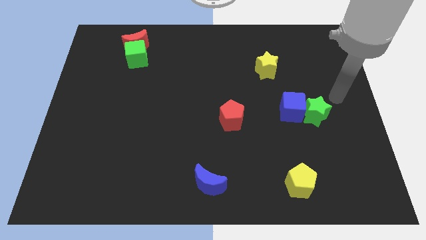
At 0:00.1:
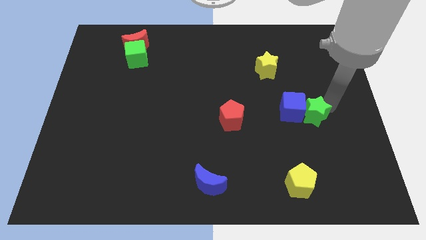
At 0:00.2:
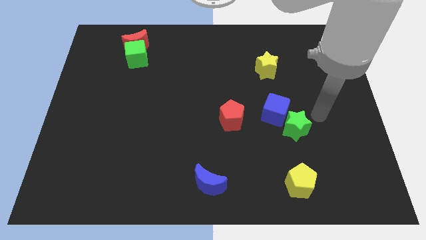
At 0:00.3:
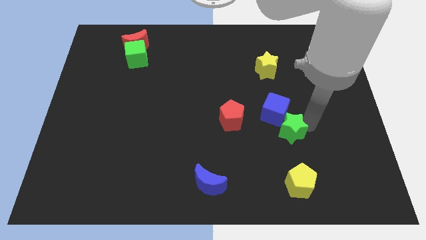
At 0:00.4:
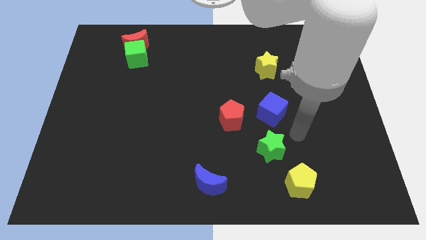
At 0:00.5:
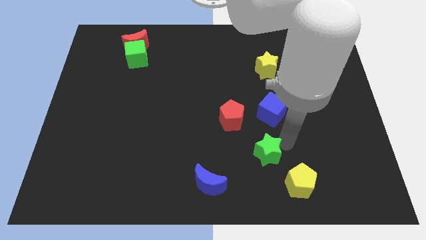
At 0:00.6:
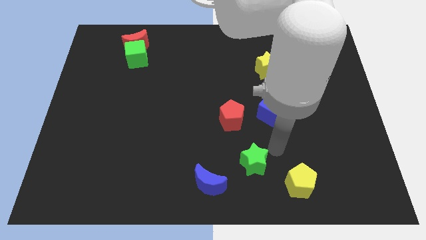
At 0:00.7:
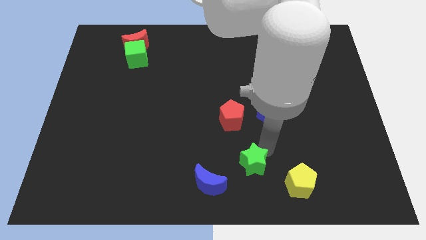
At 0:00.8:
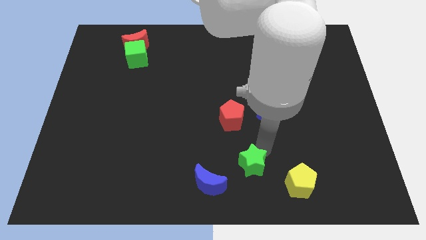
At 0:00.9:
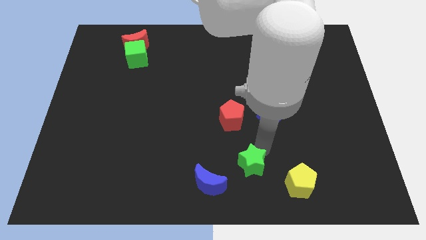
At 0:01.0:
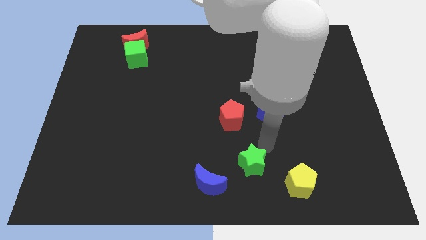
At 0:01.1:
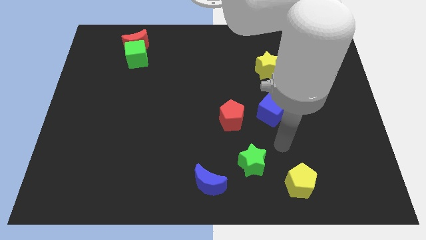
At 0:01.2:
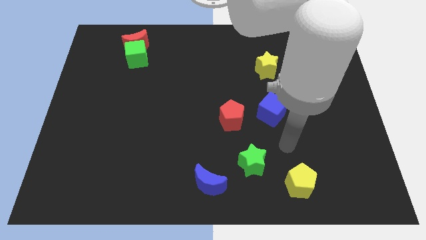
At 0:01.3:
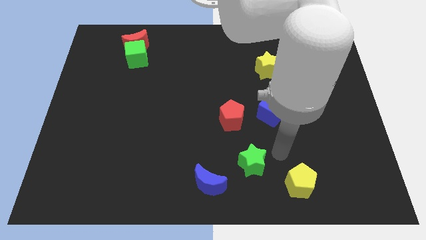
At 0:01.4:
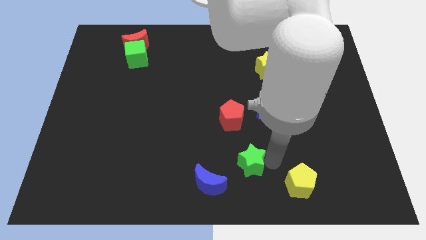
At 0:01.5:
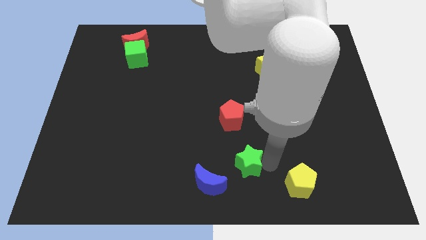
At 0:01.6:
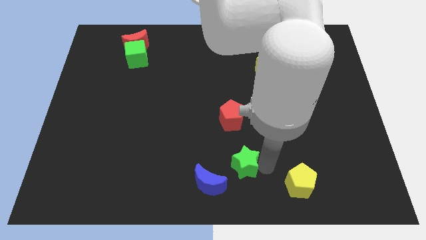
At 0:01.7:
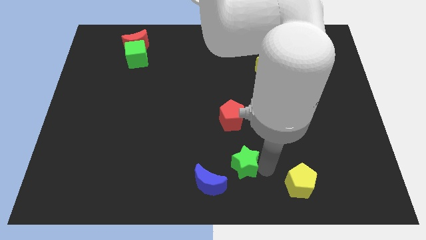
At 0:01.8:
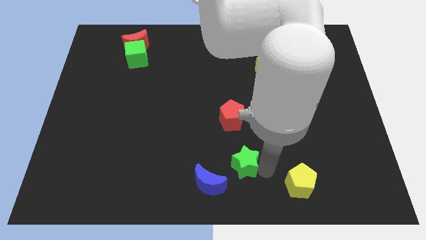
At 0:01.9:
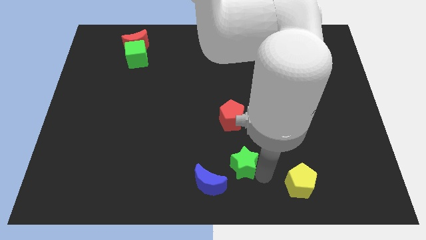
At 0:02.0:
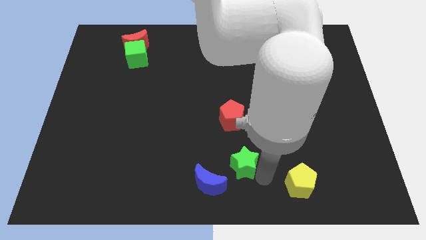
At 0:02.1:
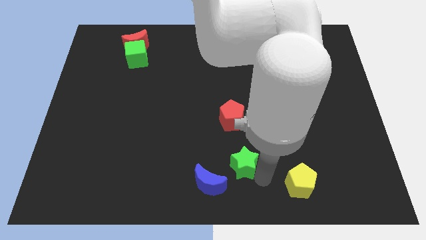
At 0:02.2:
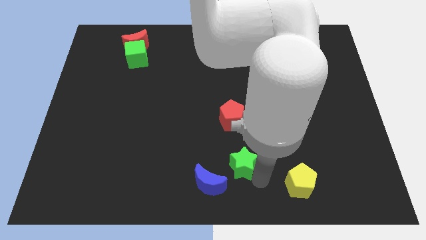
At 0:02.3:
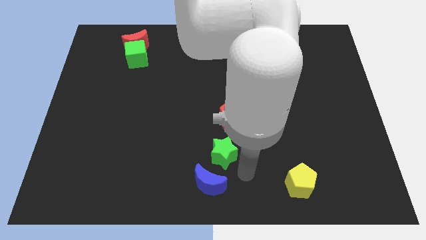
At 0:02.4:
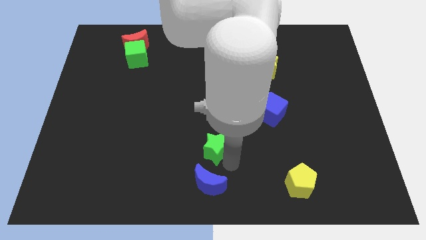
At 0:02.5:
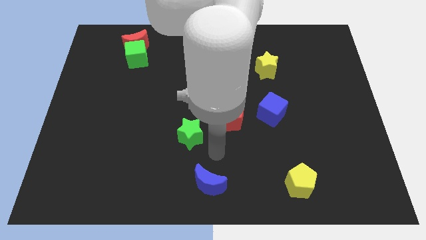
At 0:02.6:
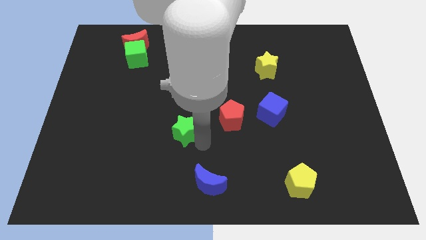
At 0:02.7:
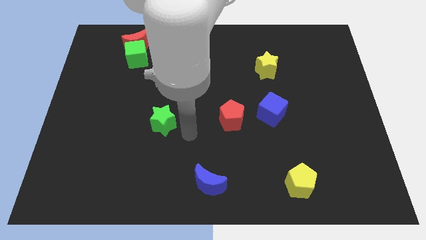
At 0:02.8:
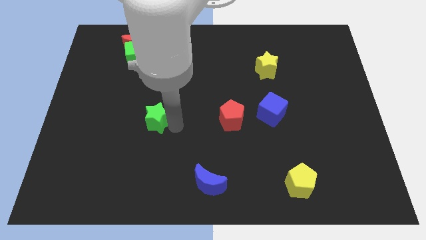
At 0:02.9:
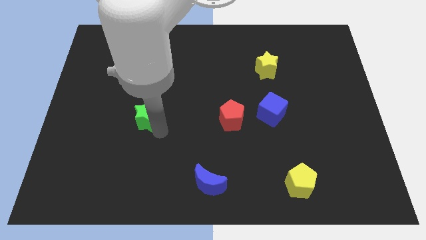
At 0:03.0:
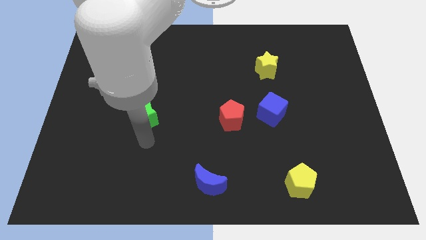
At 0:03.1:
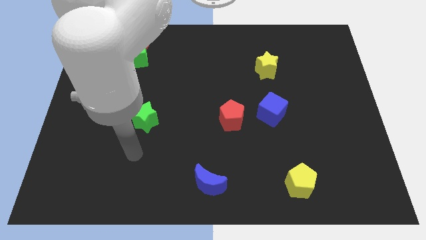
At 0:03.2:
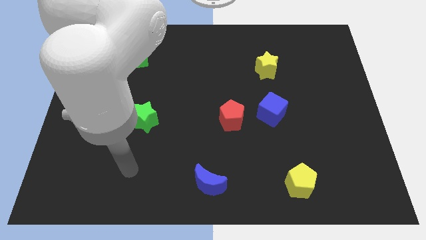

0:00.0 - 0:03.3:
place the green star horizontally to the left side of the red pentagon

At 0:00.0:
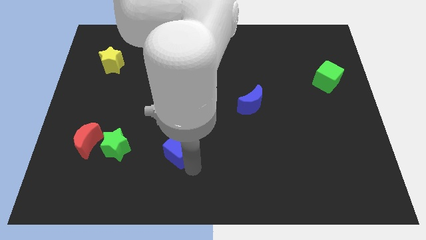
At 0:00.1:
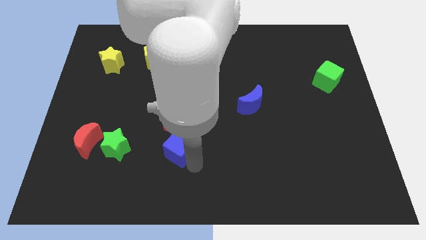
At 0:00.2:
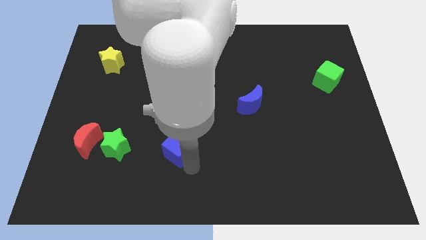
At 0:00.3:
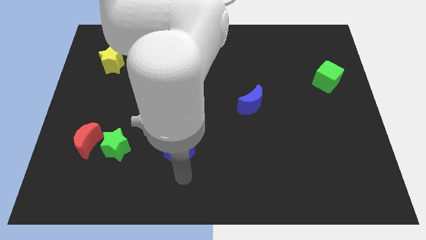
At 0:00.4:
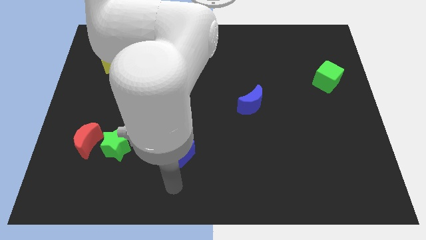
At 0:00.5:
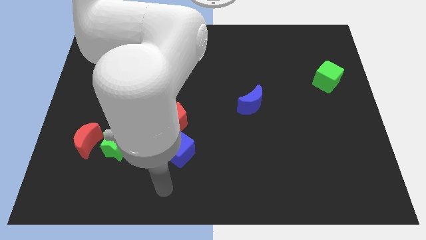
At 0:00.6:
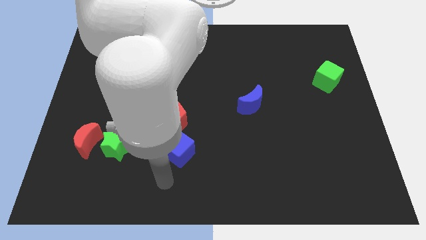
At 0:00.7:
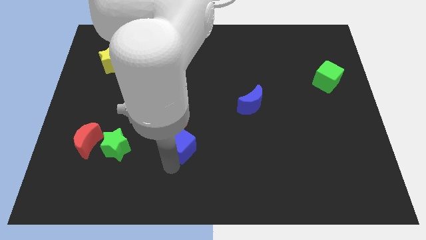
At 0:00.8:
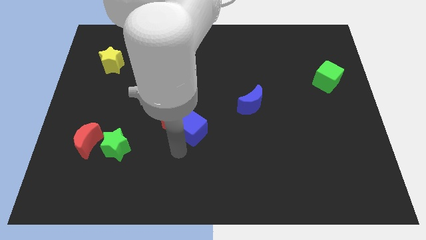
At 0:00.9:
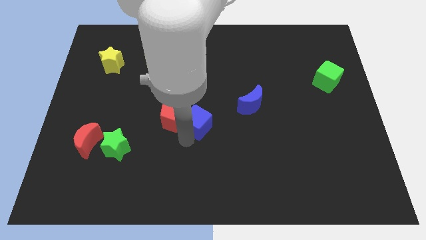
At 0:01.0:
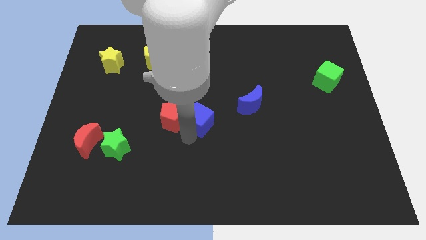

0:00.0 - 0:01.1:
place blue cube on right side of red pentagon

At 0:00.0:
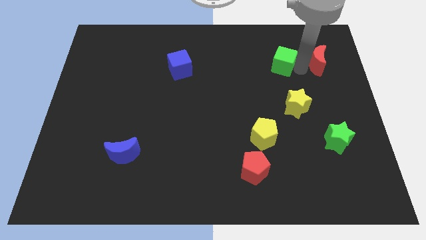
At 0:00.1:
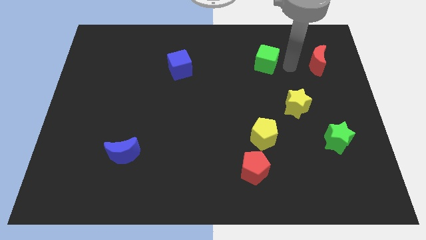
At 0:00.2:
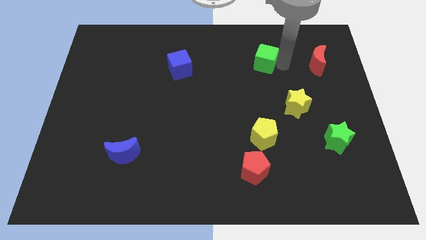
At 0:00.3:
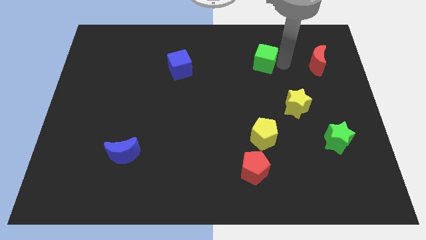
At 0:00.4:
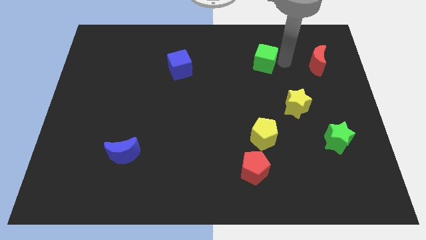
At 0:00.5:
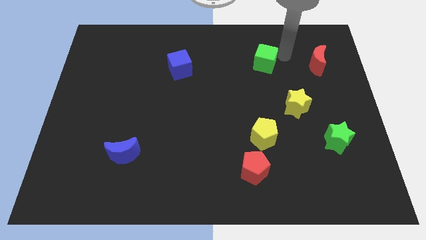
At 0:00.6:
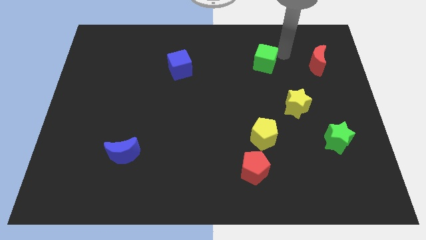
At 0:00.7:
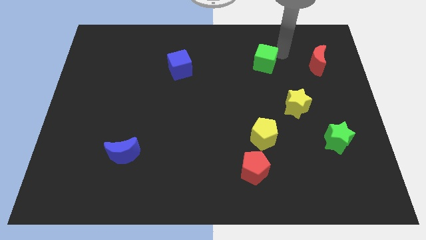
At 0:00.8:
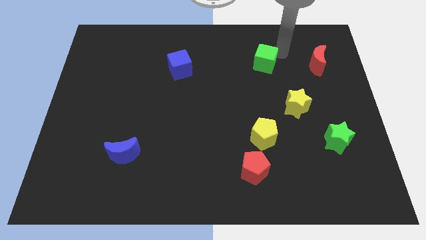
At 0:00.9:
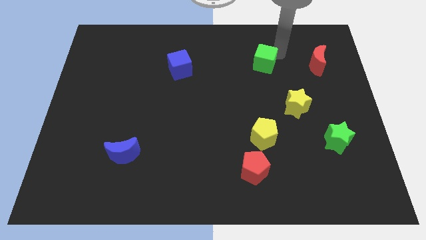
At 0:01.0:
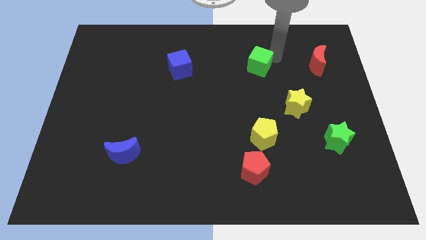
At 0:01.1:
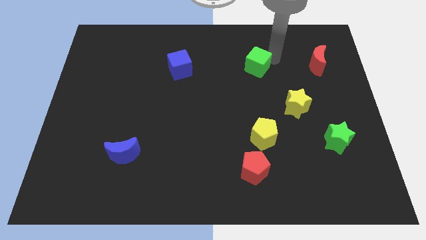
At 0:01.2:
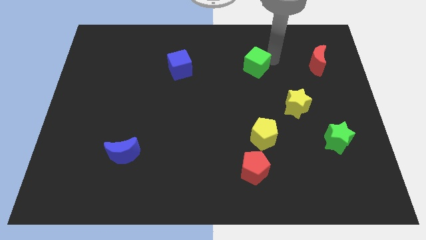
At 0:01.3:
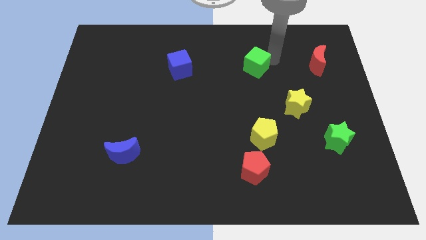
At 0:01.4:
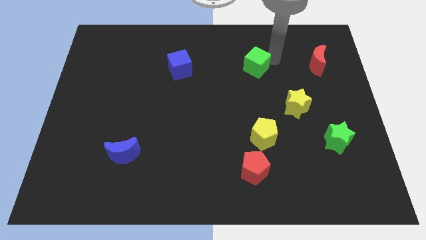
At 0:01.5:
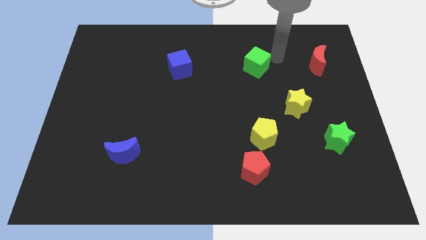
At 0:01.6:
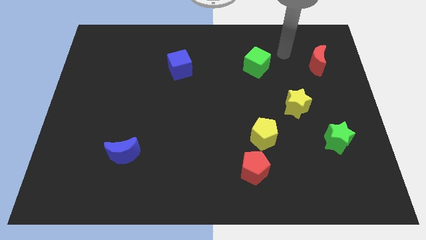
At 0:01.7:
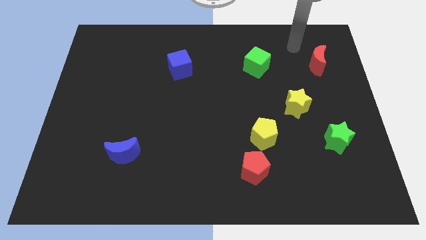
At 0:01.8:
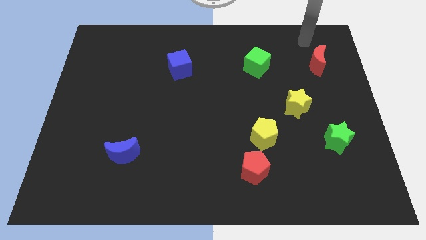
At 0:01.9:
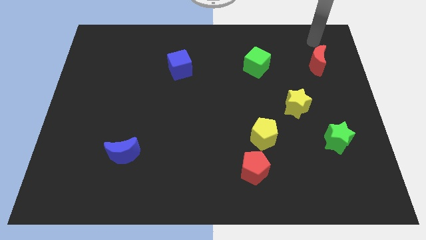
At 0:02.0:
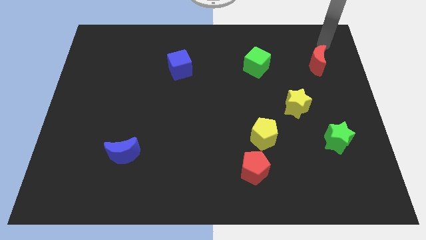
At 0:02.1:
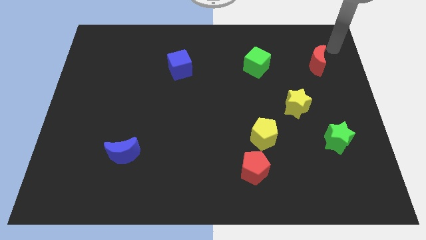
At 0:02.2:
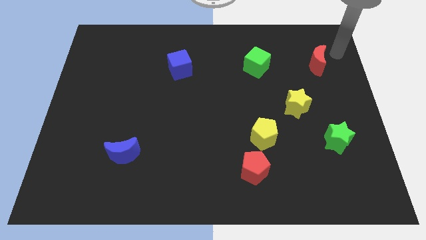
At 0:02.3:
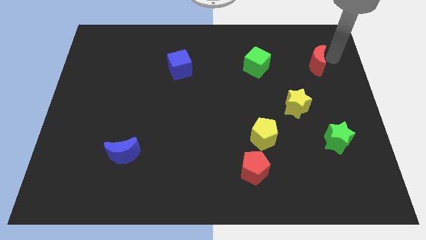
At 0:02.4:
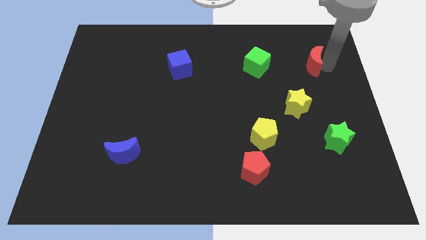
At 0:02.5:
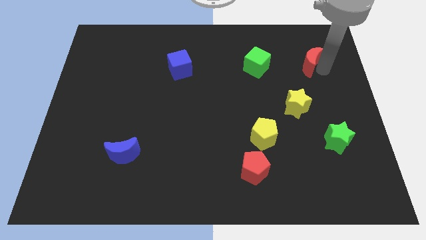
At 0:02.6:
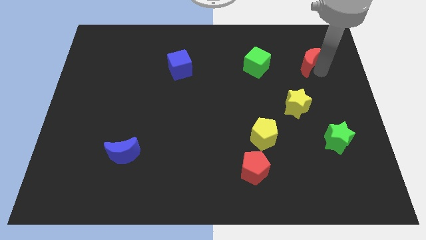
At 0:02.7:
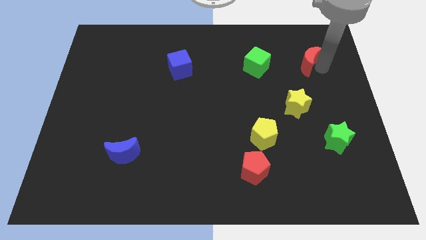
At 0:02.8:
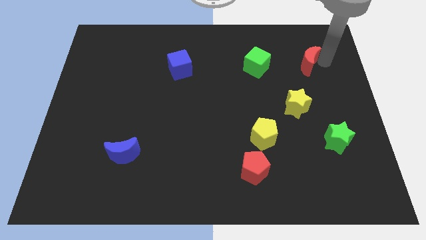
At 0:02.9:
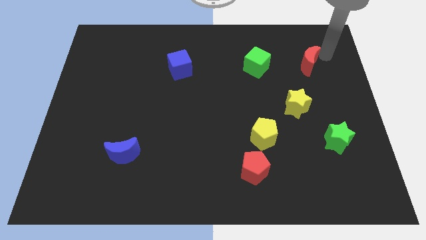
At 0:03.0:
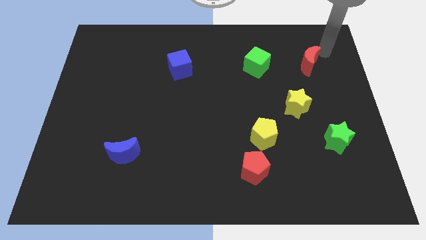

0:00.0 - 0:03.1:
move the green cube in between the blue cube and red moon

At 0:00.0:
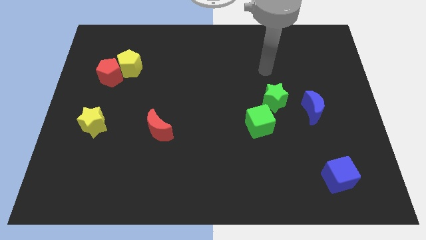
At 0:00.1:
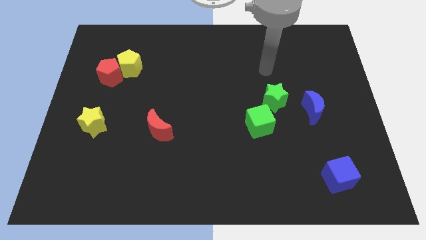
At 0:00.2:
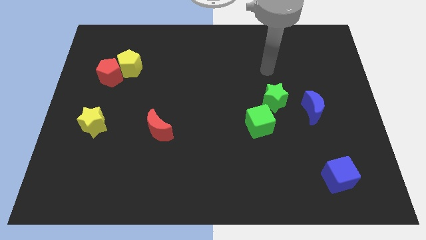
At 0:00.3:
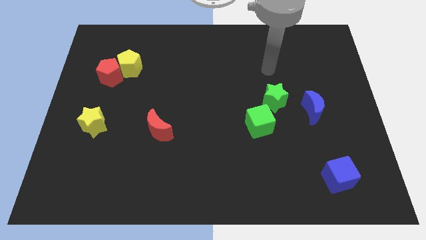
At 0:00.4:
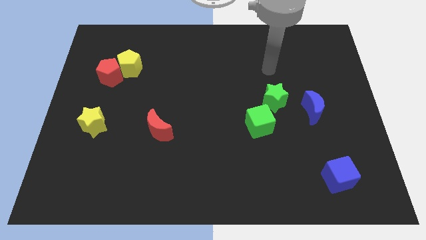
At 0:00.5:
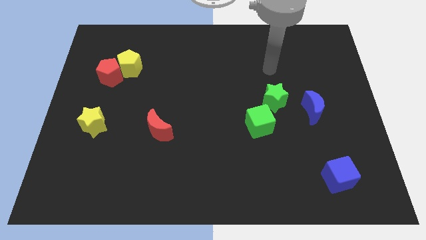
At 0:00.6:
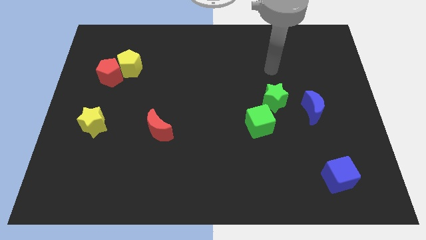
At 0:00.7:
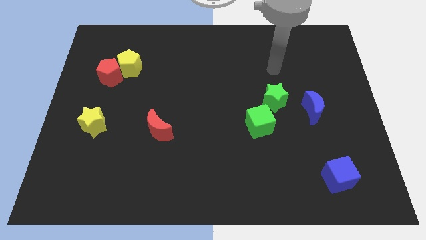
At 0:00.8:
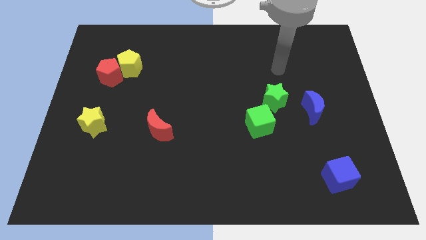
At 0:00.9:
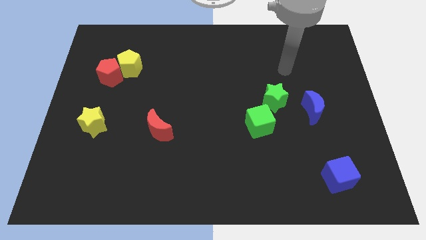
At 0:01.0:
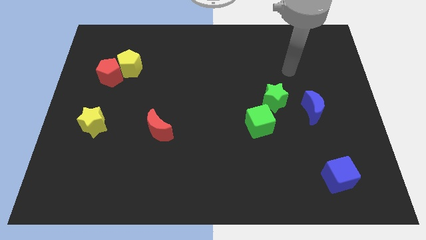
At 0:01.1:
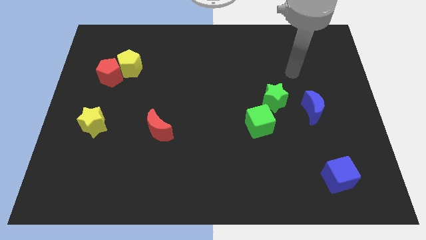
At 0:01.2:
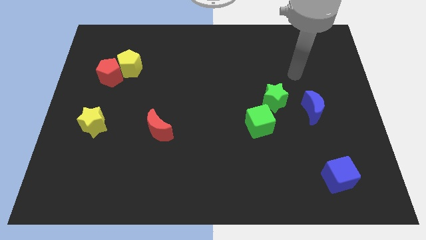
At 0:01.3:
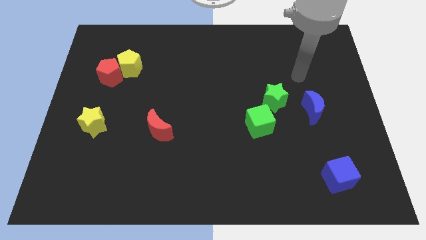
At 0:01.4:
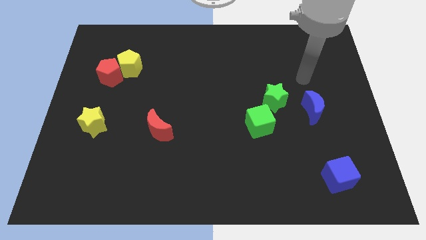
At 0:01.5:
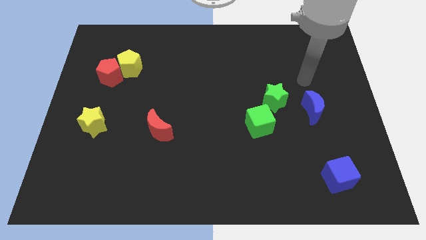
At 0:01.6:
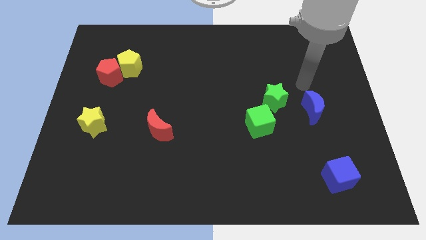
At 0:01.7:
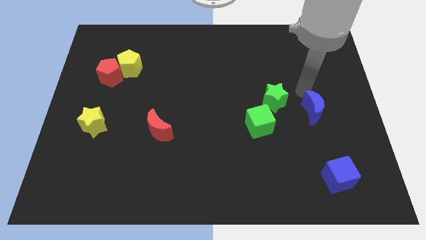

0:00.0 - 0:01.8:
move the arm towards the top of blue crescent
